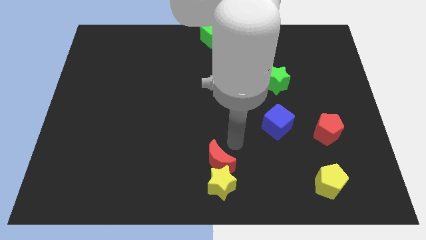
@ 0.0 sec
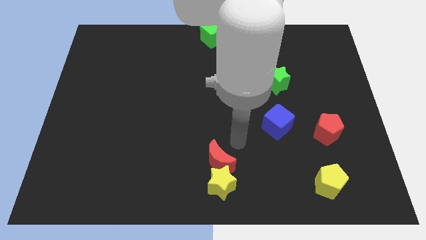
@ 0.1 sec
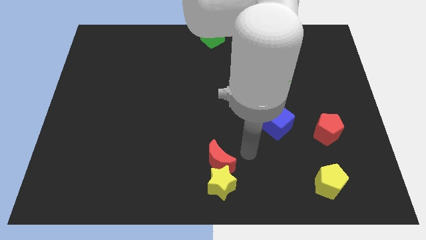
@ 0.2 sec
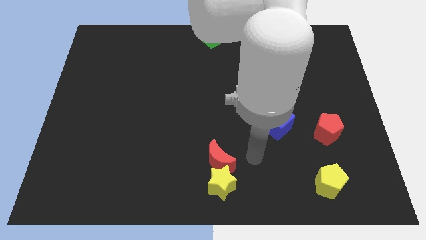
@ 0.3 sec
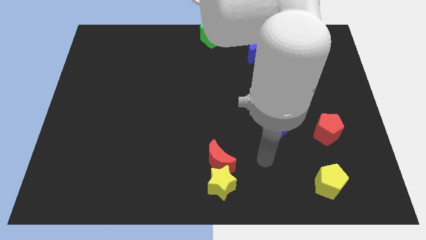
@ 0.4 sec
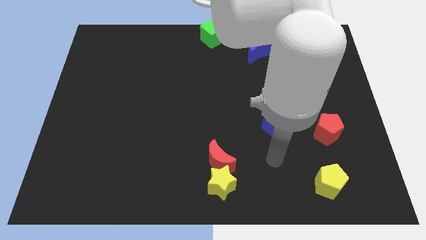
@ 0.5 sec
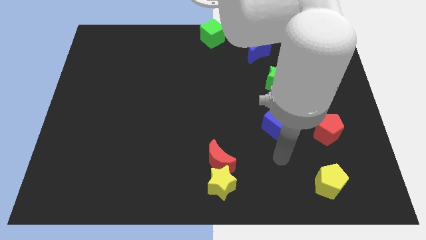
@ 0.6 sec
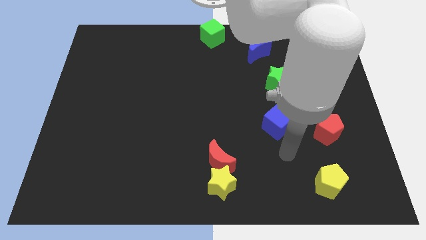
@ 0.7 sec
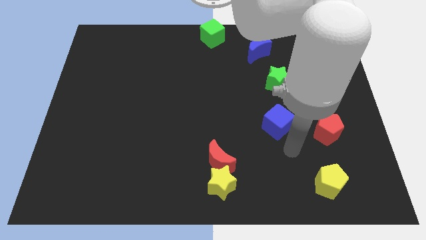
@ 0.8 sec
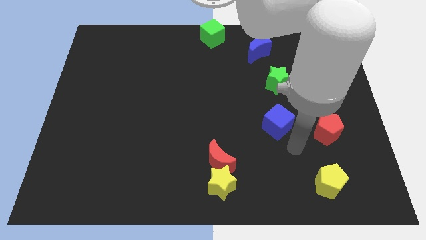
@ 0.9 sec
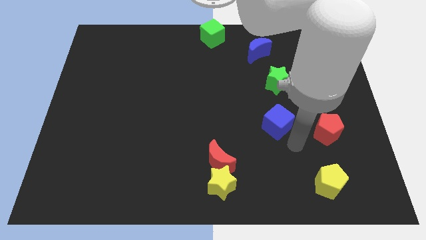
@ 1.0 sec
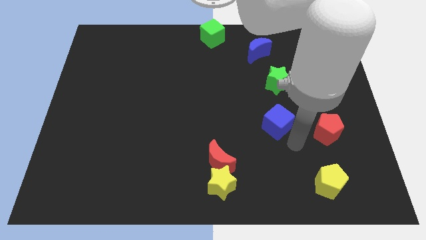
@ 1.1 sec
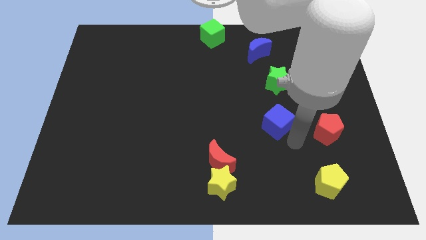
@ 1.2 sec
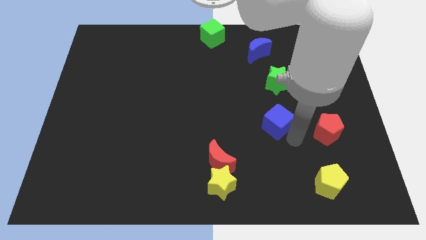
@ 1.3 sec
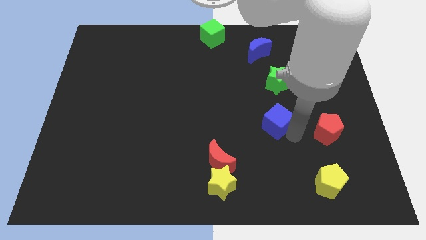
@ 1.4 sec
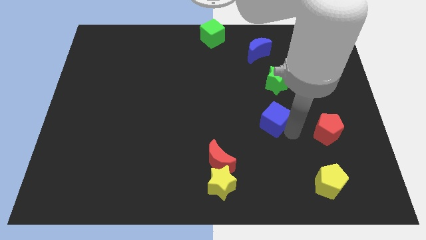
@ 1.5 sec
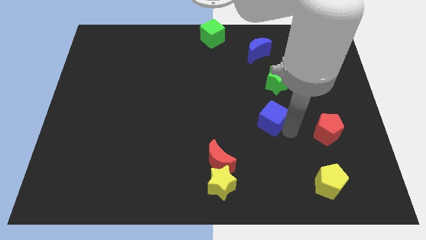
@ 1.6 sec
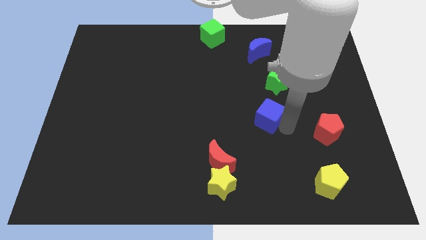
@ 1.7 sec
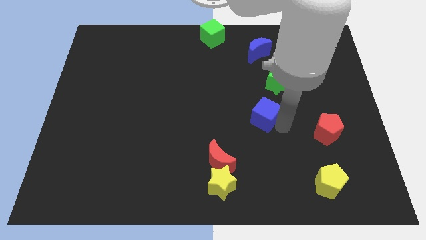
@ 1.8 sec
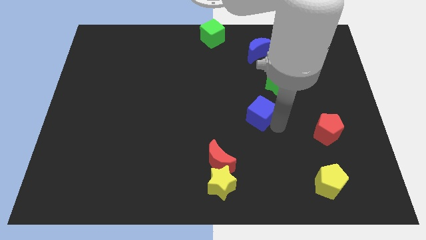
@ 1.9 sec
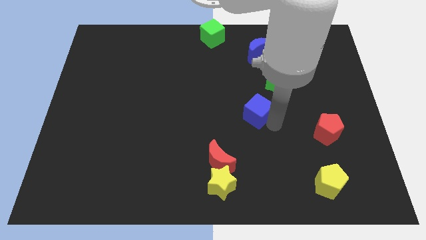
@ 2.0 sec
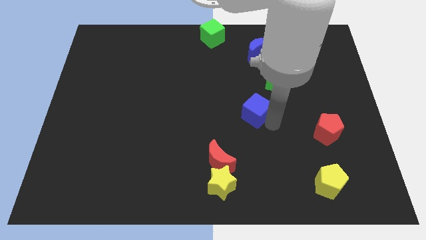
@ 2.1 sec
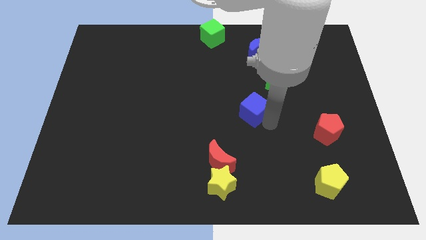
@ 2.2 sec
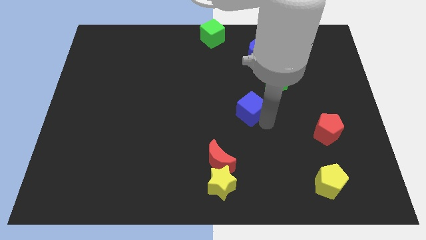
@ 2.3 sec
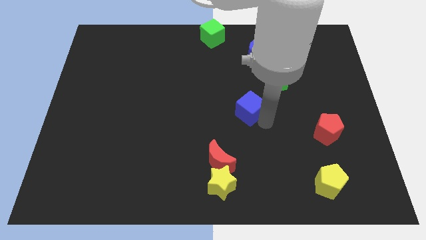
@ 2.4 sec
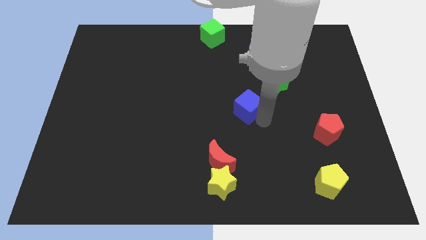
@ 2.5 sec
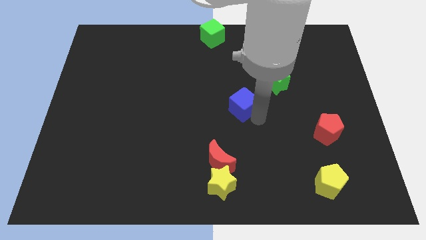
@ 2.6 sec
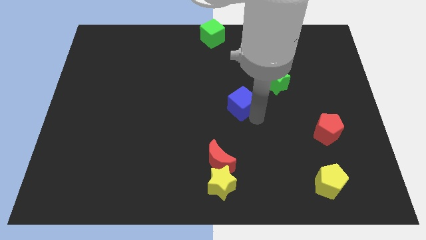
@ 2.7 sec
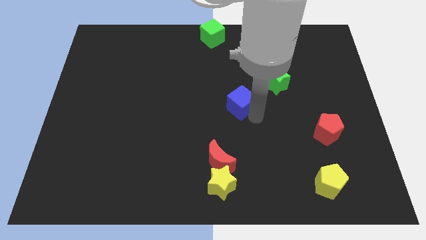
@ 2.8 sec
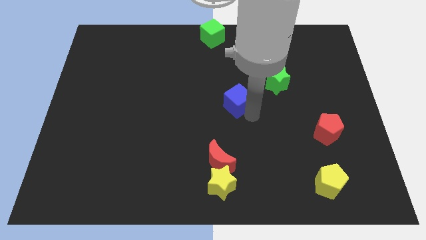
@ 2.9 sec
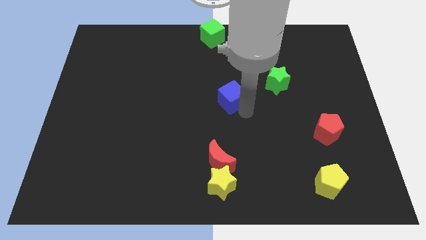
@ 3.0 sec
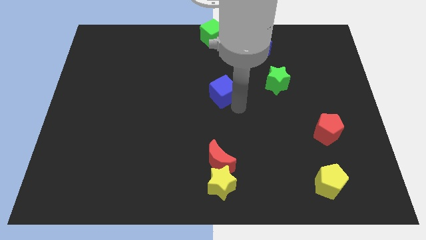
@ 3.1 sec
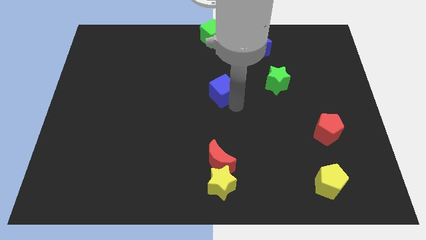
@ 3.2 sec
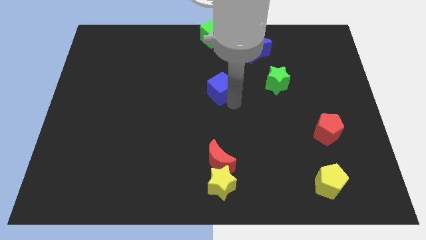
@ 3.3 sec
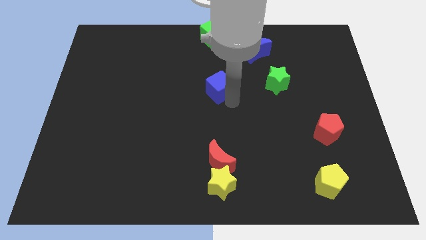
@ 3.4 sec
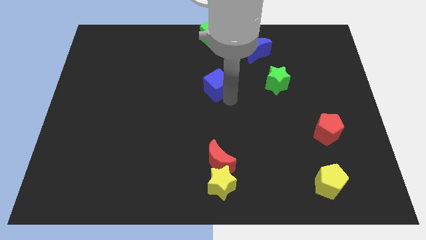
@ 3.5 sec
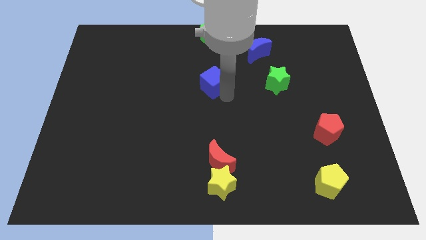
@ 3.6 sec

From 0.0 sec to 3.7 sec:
move the blue cube towards the center of the board

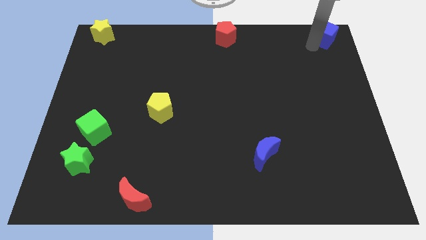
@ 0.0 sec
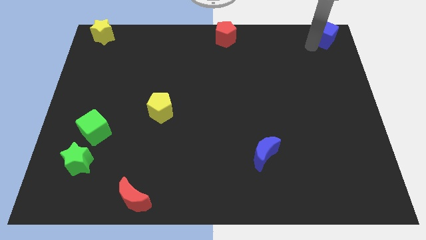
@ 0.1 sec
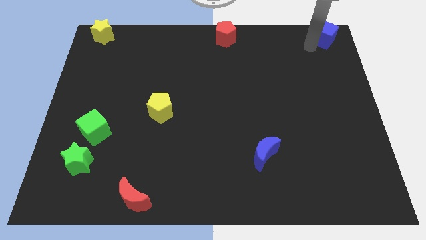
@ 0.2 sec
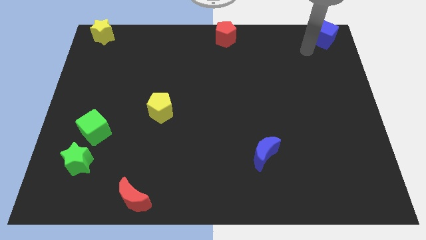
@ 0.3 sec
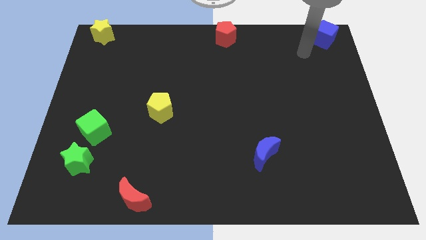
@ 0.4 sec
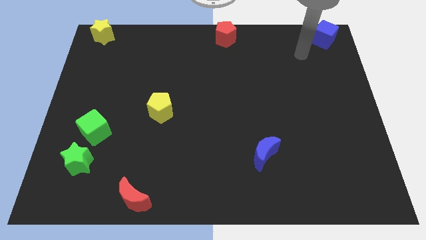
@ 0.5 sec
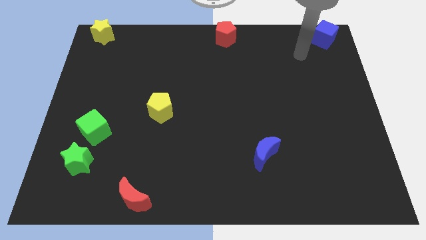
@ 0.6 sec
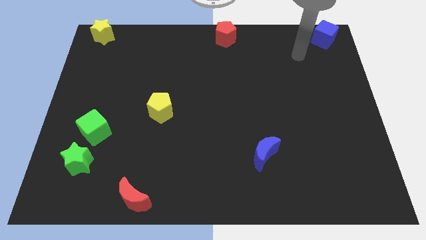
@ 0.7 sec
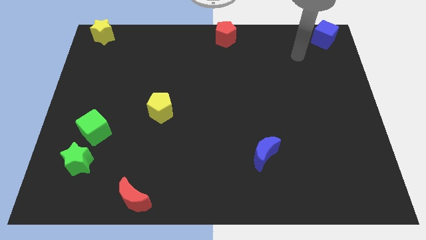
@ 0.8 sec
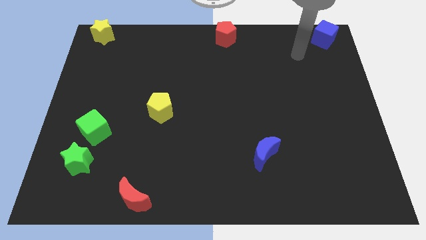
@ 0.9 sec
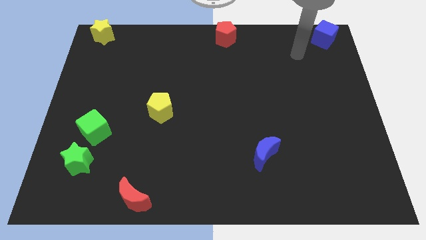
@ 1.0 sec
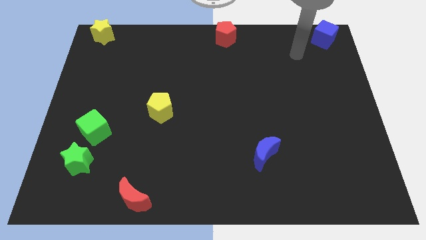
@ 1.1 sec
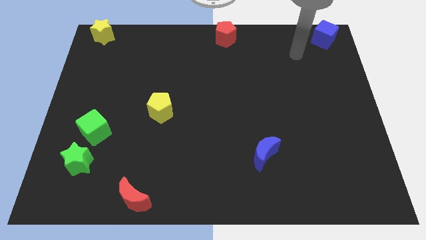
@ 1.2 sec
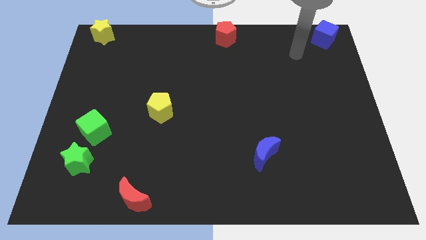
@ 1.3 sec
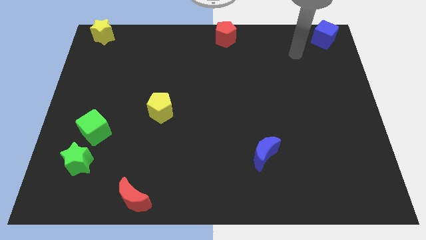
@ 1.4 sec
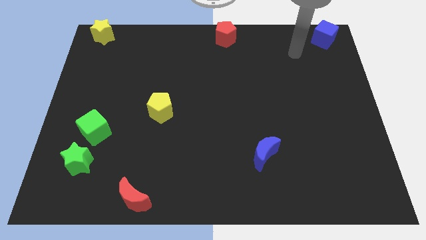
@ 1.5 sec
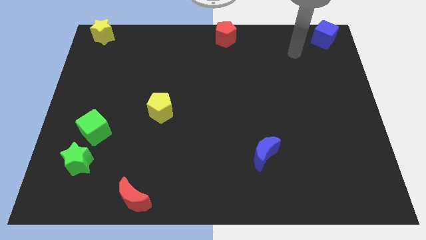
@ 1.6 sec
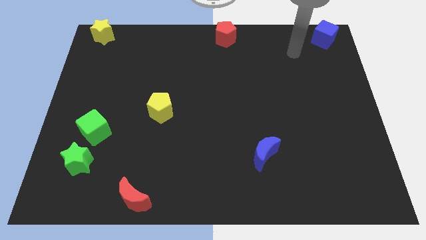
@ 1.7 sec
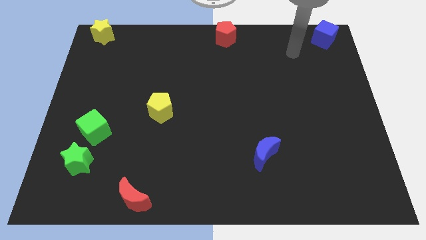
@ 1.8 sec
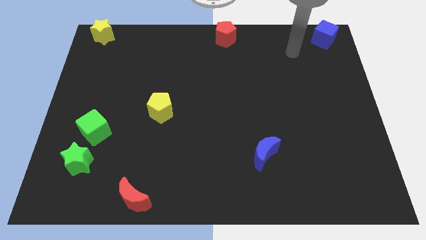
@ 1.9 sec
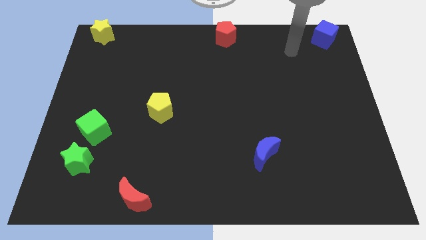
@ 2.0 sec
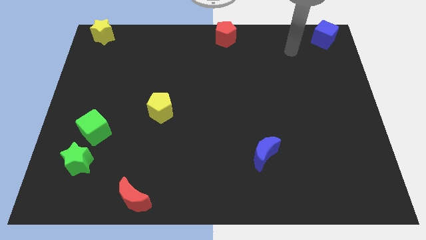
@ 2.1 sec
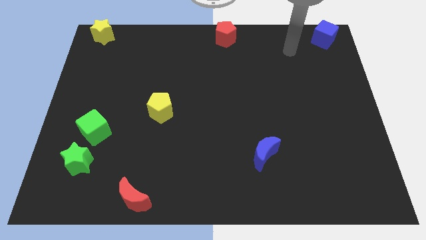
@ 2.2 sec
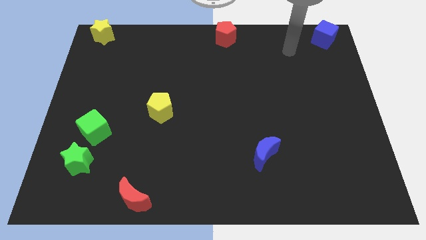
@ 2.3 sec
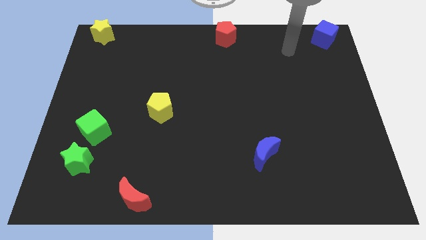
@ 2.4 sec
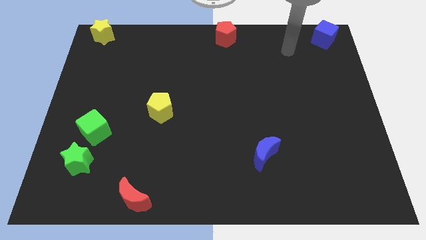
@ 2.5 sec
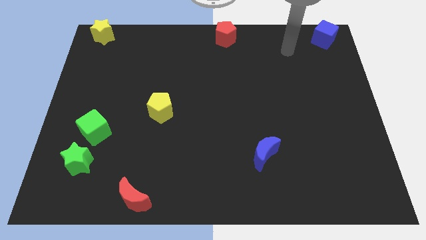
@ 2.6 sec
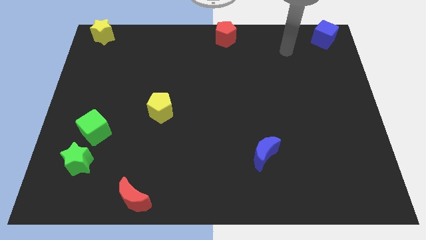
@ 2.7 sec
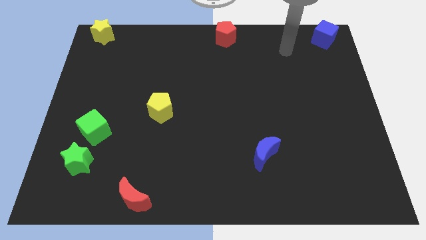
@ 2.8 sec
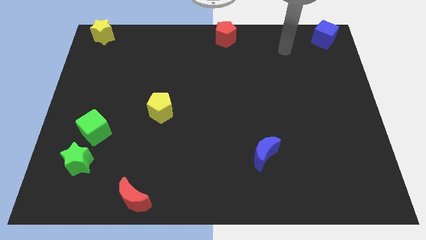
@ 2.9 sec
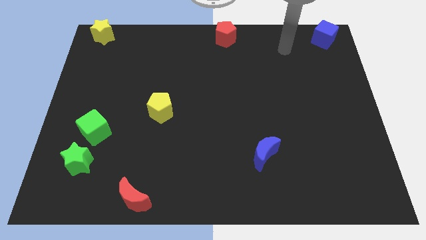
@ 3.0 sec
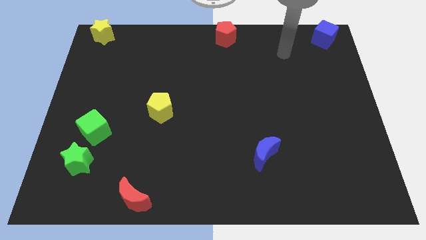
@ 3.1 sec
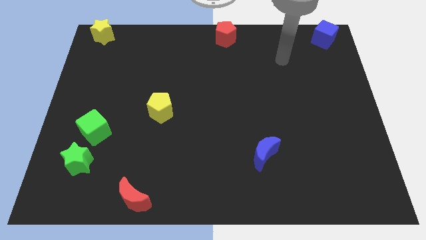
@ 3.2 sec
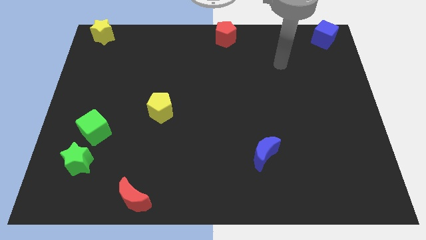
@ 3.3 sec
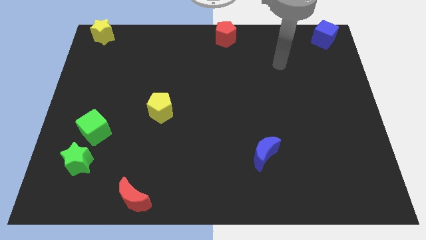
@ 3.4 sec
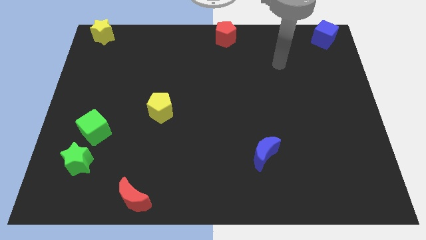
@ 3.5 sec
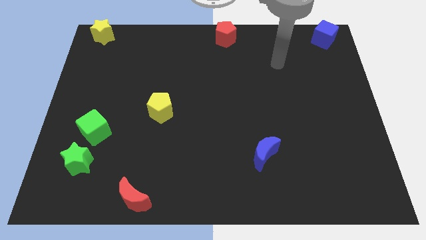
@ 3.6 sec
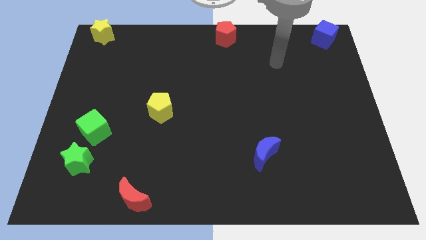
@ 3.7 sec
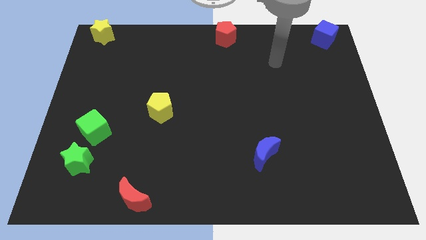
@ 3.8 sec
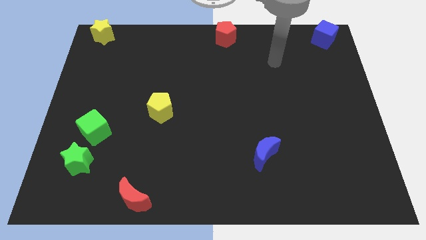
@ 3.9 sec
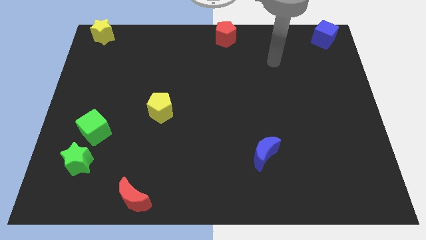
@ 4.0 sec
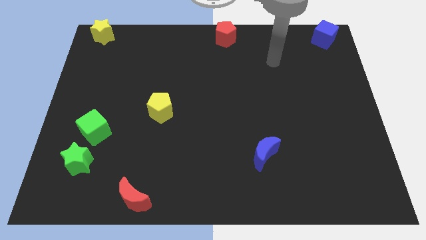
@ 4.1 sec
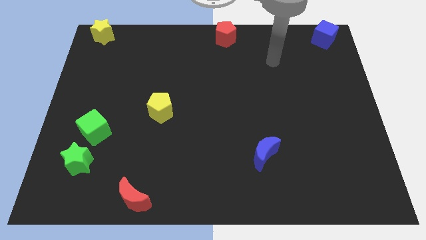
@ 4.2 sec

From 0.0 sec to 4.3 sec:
move your arm away from the blue cube

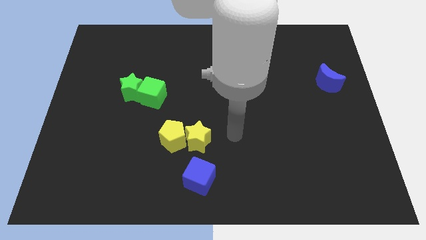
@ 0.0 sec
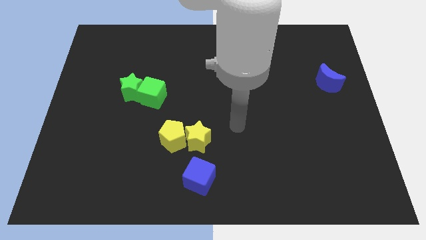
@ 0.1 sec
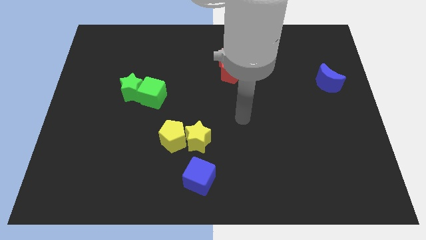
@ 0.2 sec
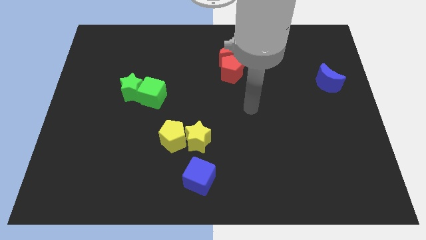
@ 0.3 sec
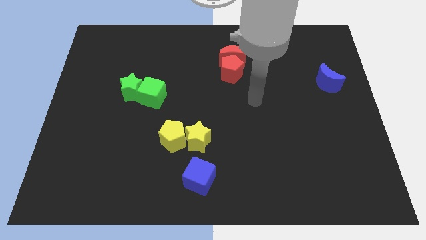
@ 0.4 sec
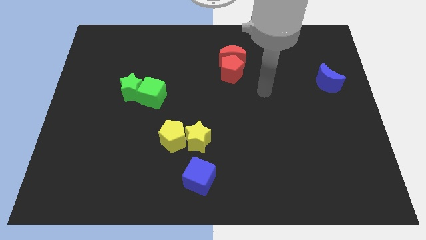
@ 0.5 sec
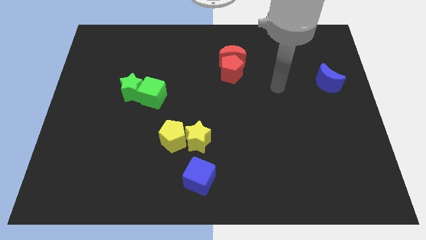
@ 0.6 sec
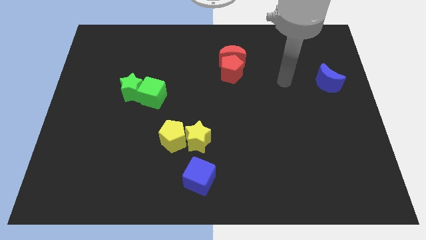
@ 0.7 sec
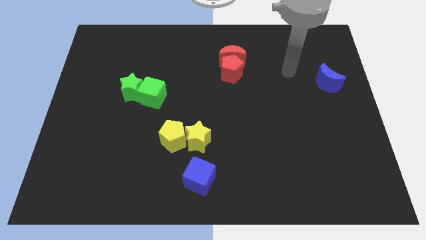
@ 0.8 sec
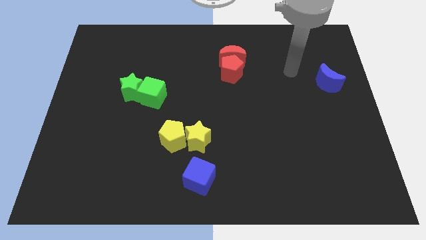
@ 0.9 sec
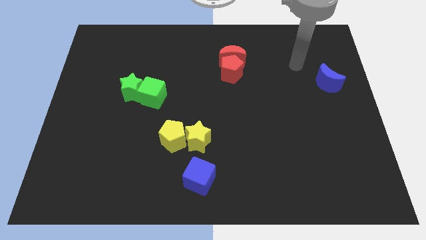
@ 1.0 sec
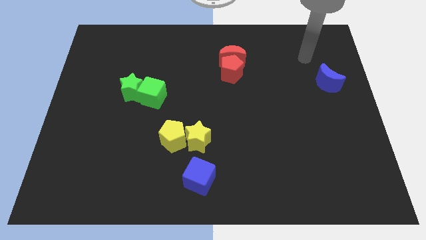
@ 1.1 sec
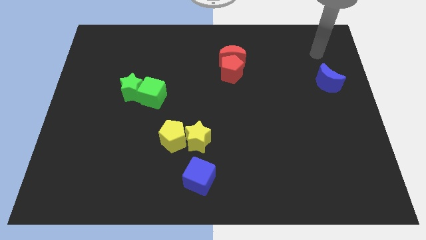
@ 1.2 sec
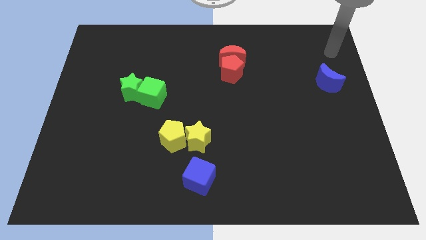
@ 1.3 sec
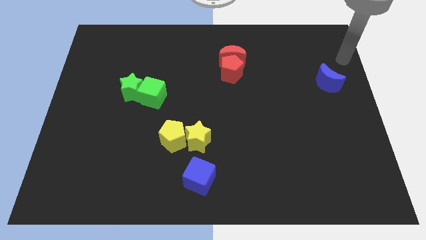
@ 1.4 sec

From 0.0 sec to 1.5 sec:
go to the top side of the blue crescent
